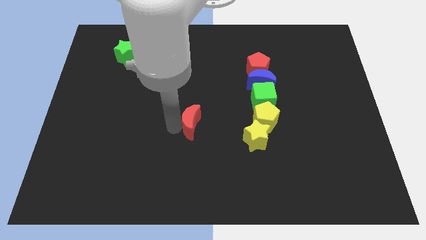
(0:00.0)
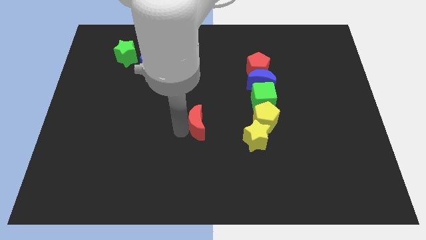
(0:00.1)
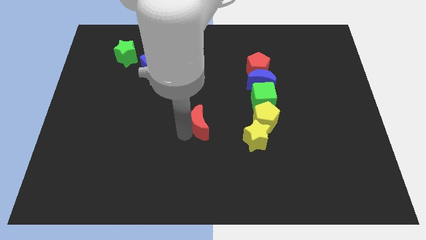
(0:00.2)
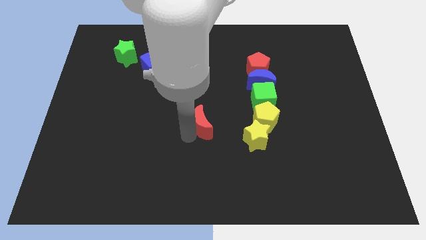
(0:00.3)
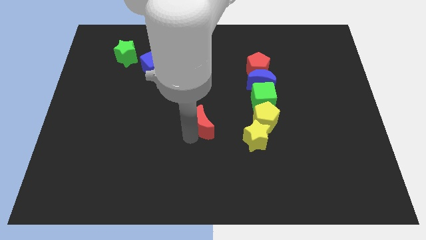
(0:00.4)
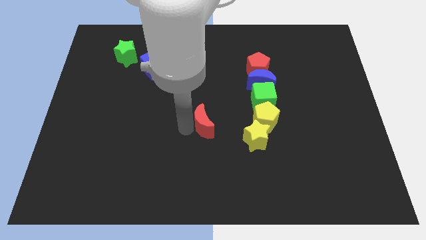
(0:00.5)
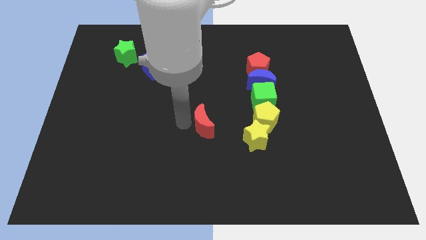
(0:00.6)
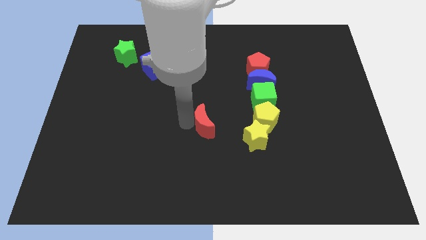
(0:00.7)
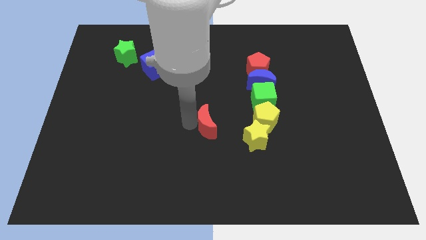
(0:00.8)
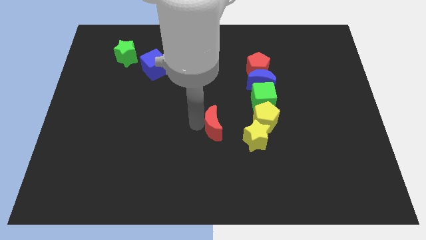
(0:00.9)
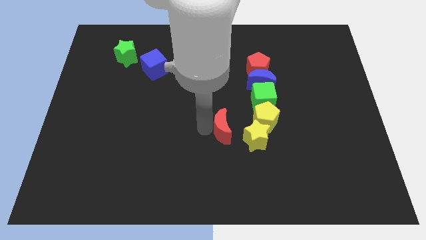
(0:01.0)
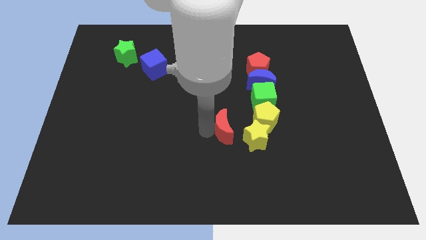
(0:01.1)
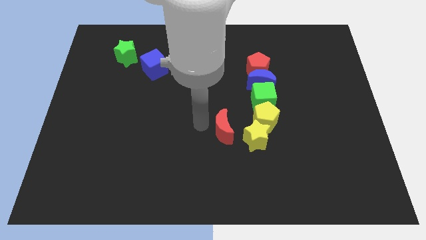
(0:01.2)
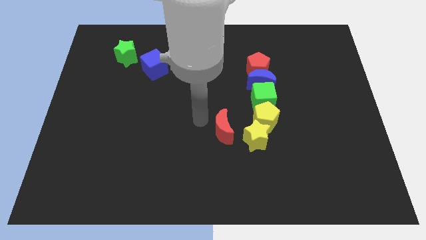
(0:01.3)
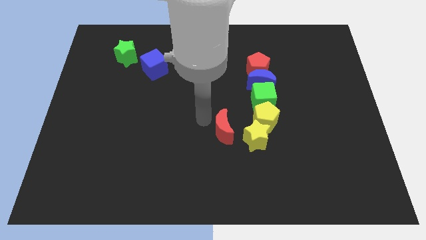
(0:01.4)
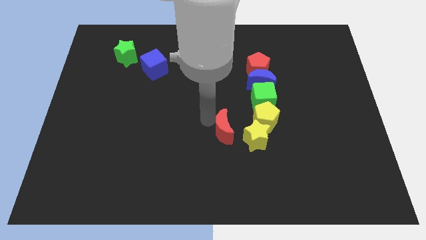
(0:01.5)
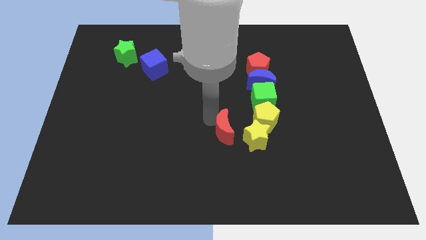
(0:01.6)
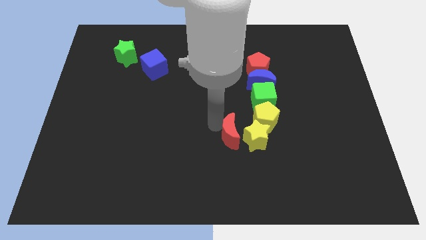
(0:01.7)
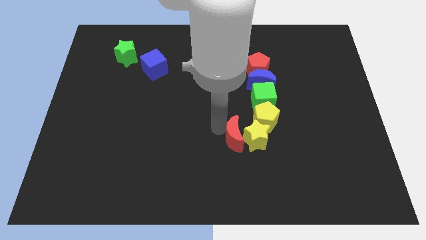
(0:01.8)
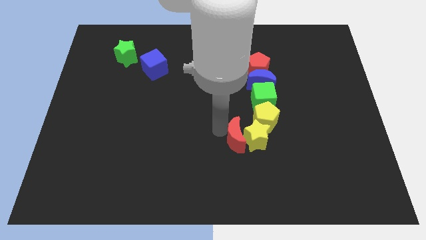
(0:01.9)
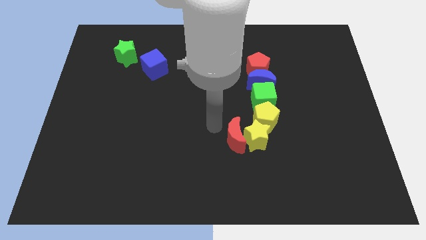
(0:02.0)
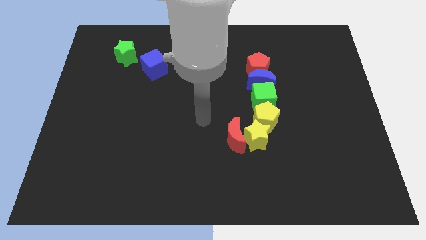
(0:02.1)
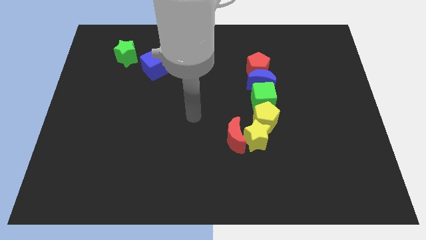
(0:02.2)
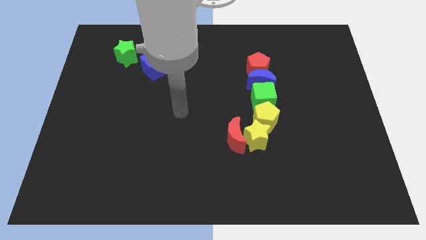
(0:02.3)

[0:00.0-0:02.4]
put the red moon to the left side of the yellow star

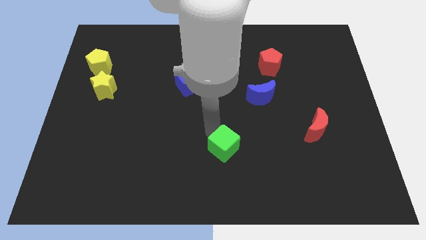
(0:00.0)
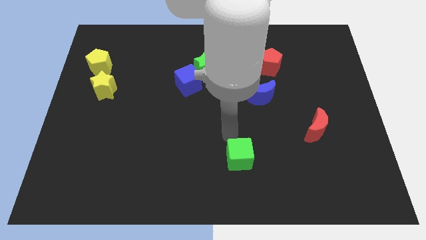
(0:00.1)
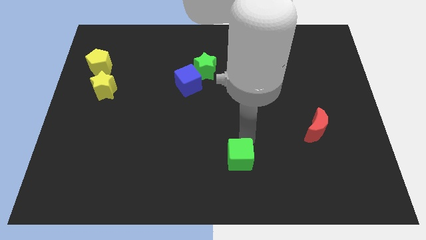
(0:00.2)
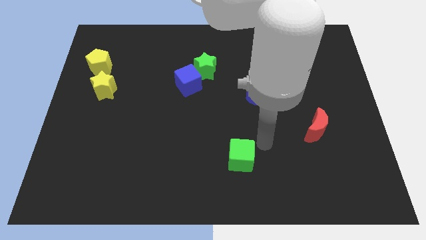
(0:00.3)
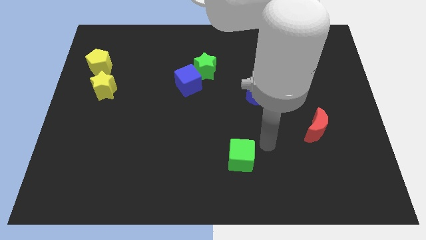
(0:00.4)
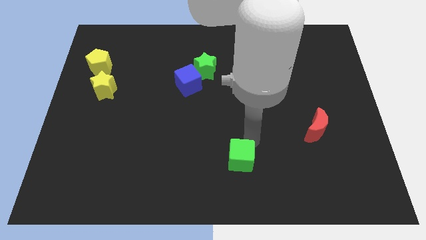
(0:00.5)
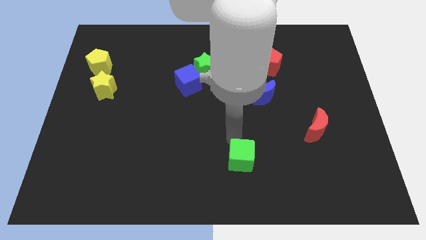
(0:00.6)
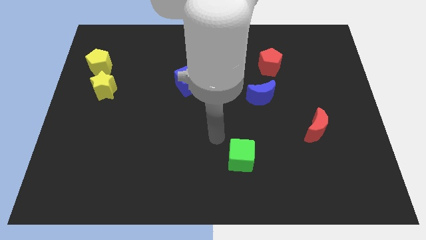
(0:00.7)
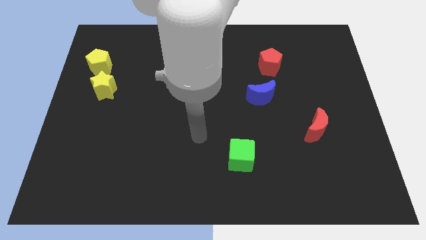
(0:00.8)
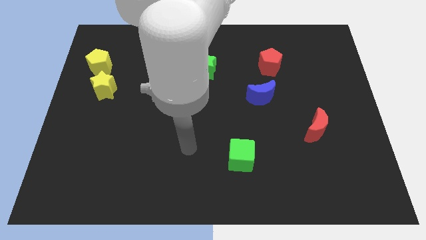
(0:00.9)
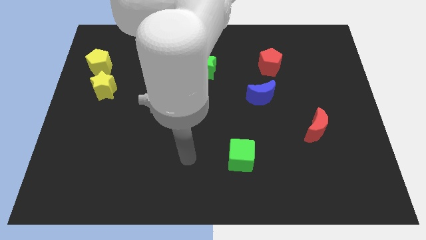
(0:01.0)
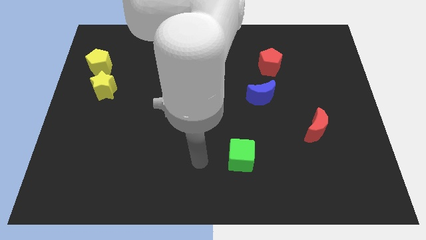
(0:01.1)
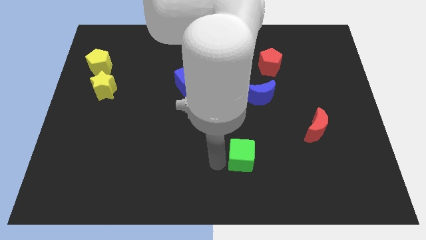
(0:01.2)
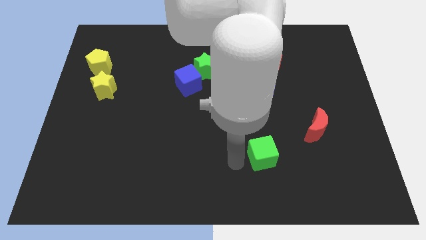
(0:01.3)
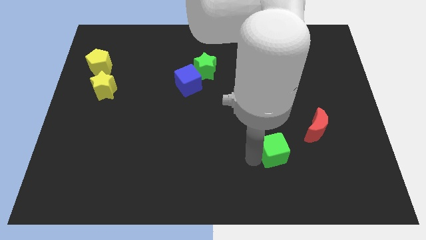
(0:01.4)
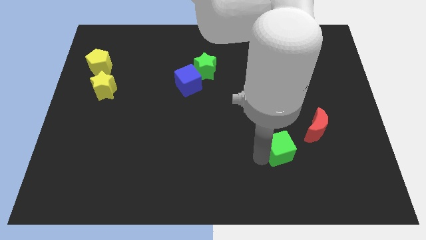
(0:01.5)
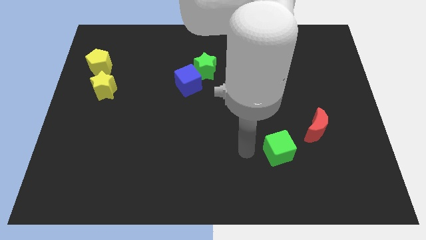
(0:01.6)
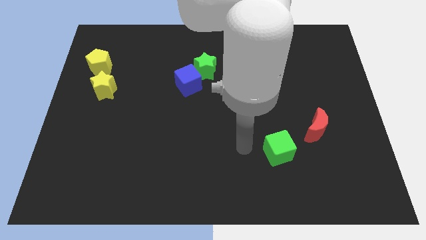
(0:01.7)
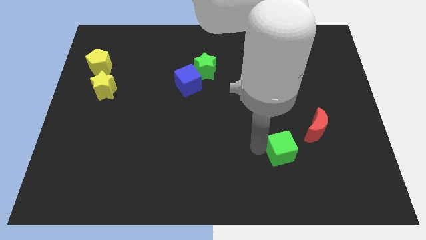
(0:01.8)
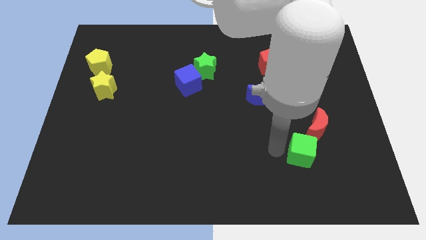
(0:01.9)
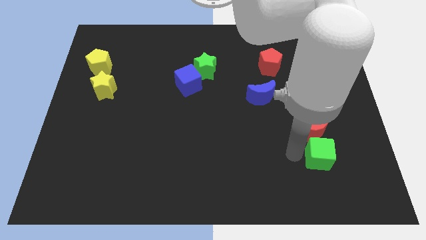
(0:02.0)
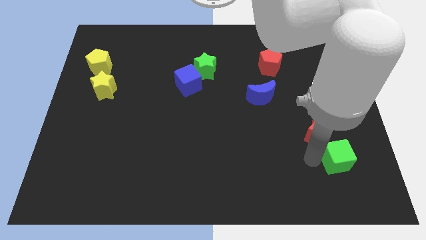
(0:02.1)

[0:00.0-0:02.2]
push the green cube slightly towards the right side of the board

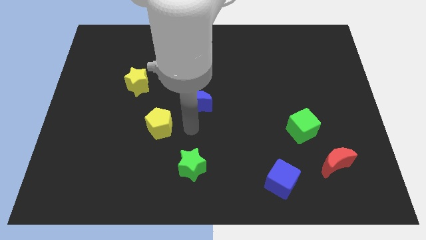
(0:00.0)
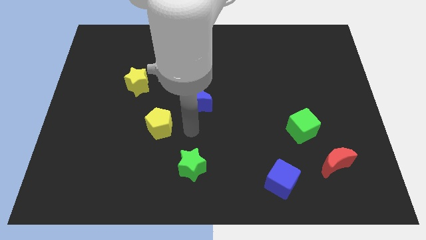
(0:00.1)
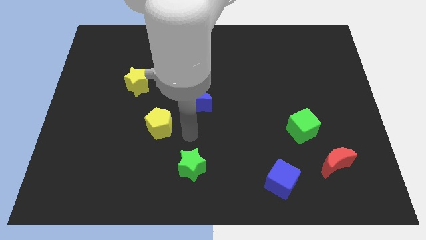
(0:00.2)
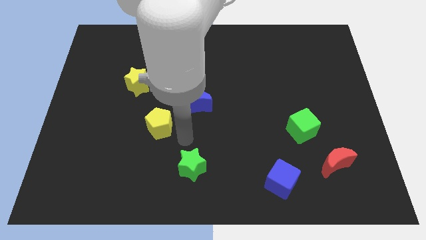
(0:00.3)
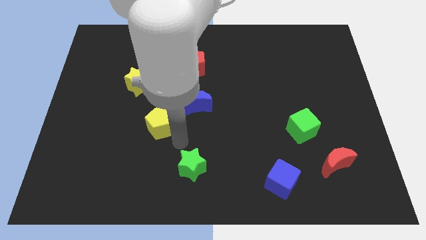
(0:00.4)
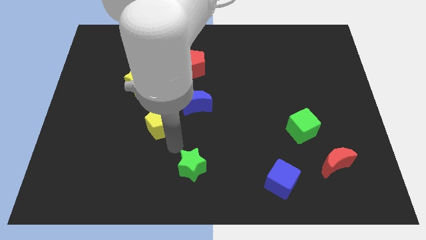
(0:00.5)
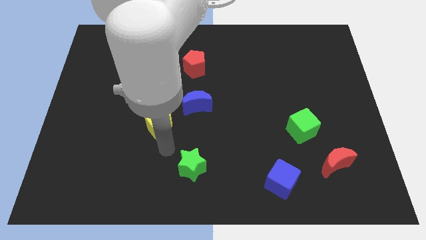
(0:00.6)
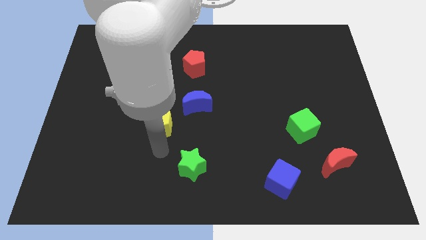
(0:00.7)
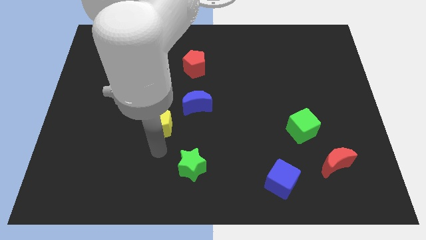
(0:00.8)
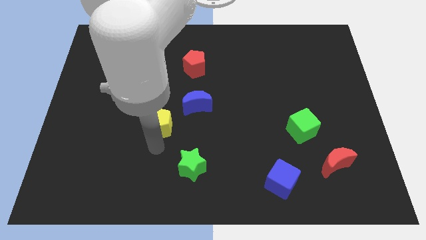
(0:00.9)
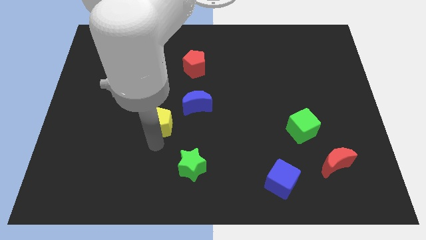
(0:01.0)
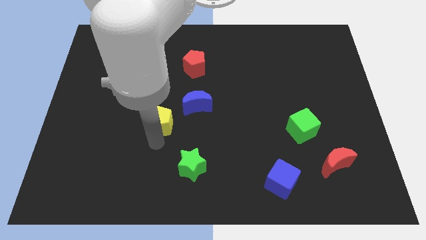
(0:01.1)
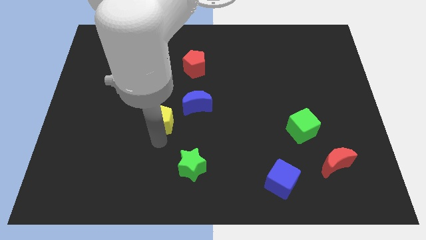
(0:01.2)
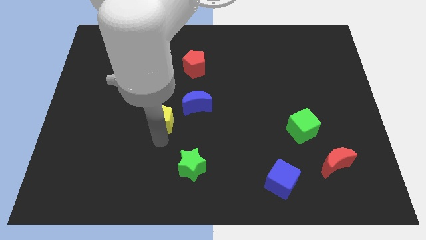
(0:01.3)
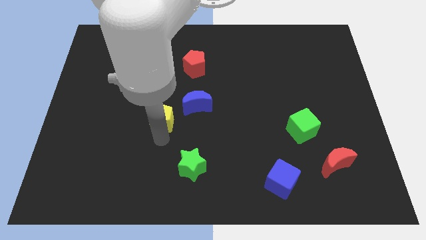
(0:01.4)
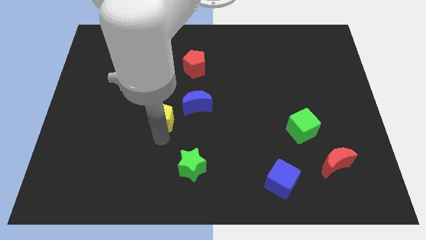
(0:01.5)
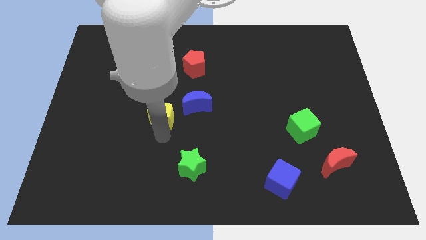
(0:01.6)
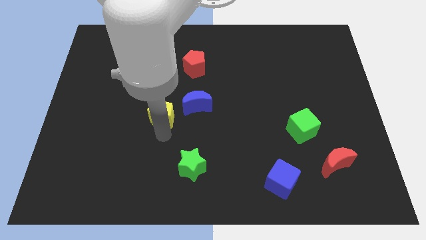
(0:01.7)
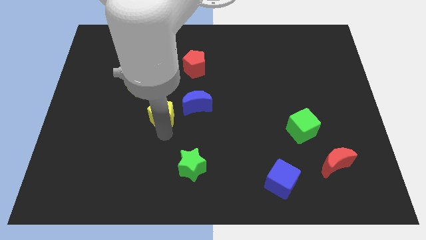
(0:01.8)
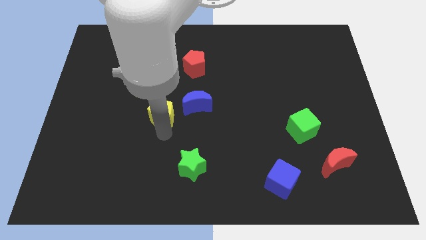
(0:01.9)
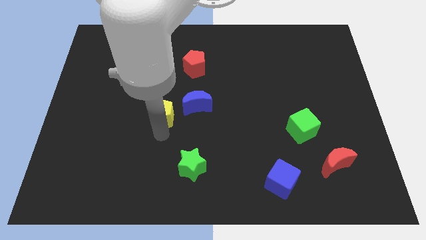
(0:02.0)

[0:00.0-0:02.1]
move the yellow pentagon up slightly

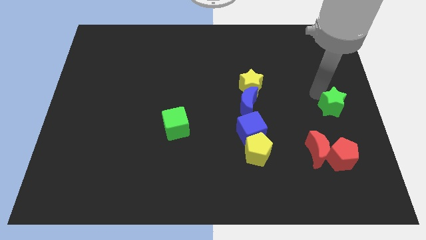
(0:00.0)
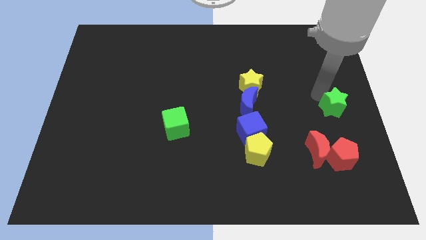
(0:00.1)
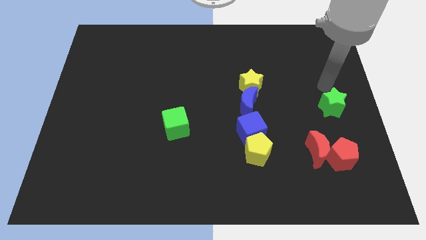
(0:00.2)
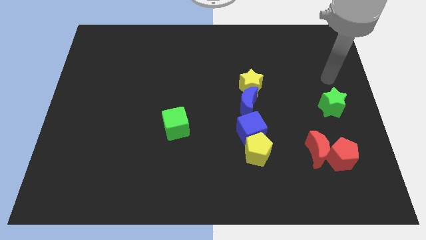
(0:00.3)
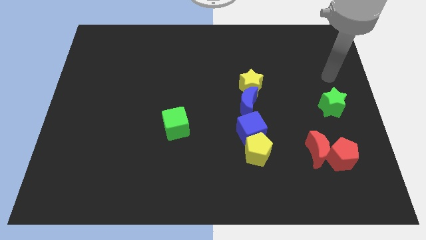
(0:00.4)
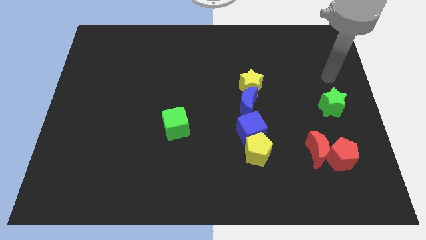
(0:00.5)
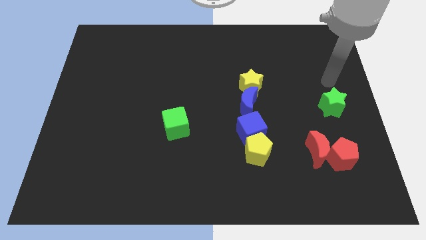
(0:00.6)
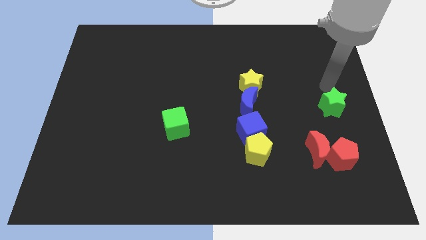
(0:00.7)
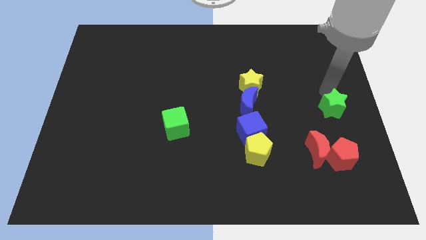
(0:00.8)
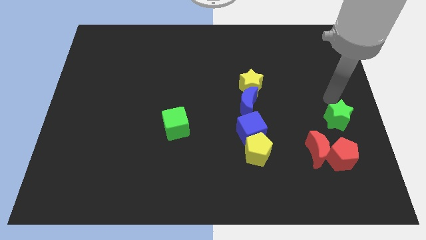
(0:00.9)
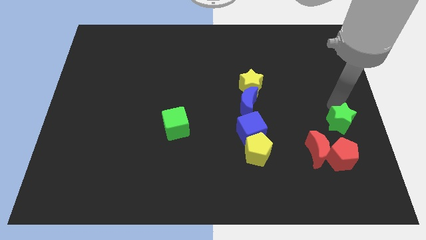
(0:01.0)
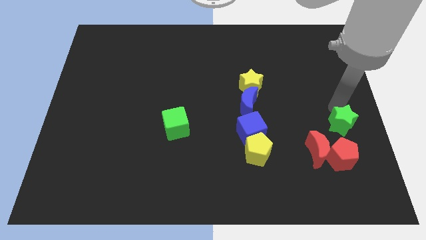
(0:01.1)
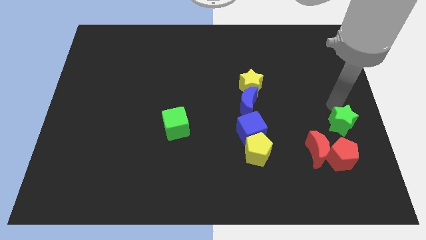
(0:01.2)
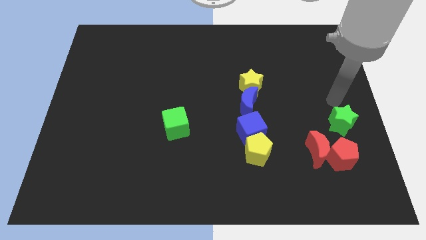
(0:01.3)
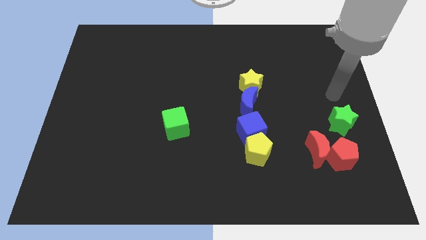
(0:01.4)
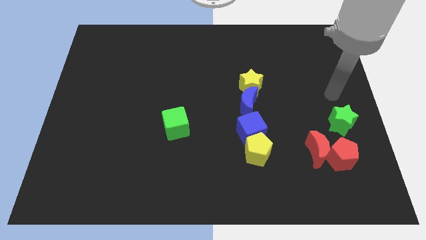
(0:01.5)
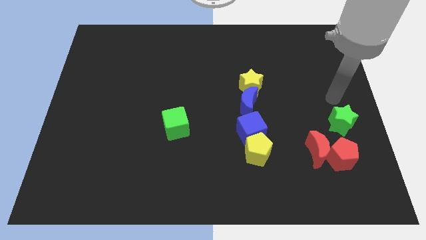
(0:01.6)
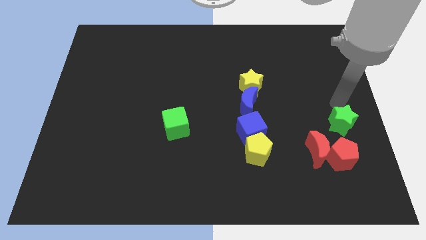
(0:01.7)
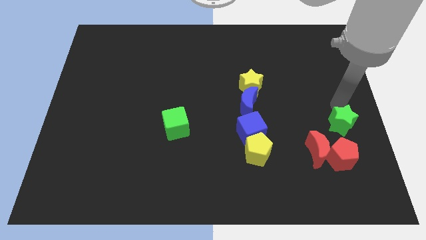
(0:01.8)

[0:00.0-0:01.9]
place the green star at the top side of the red pentagon

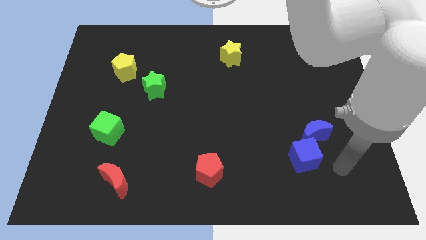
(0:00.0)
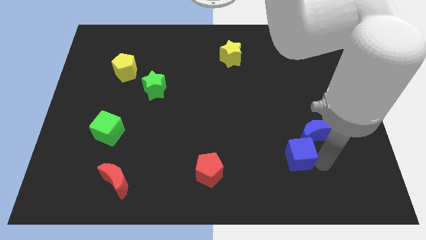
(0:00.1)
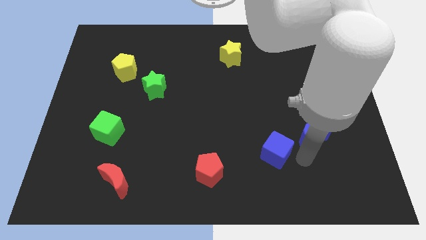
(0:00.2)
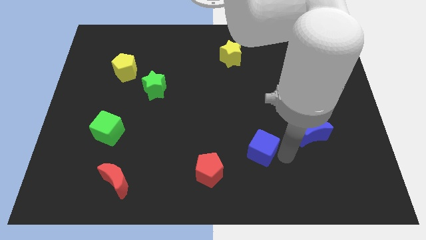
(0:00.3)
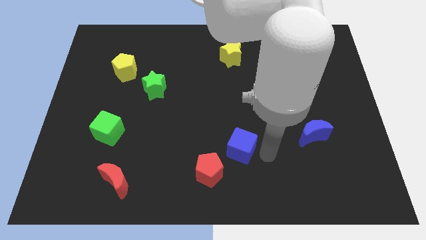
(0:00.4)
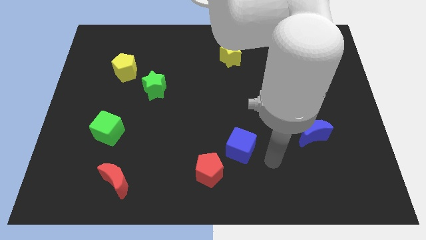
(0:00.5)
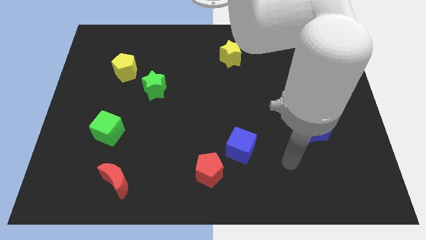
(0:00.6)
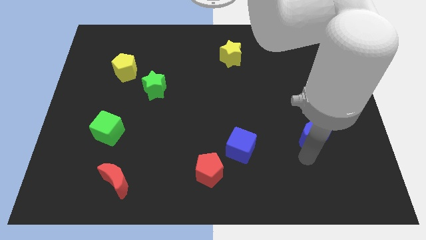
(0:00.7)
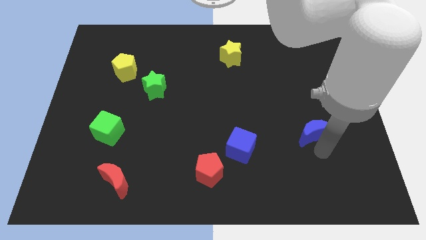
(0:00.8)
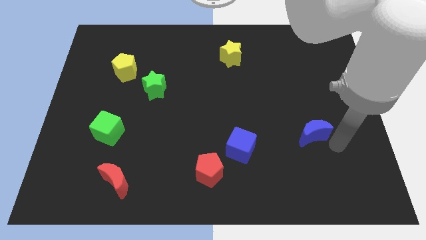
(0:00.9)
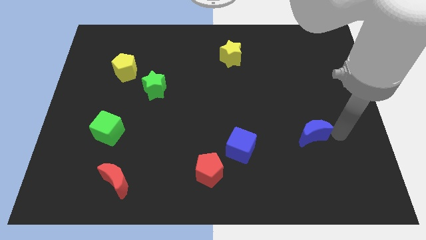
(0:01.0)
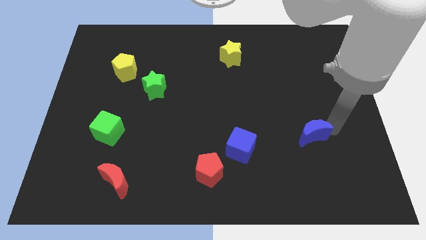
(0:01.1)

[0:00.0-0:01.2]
move the blue cube to the top right of the red pentagon
